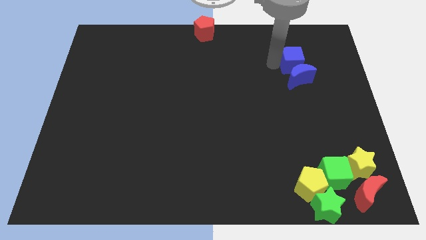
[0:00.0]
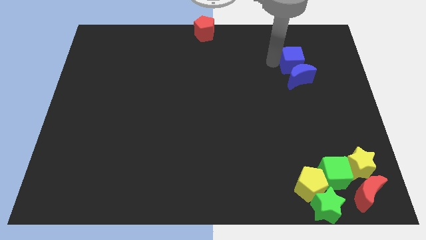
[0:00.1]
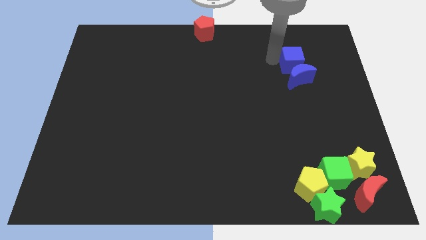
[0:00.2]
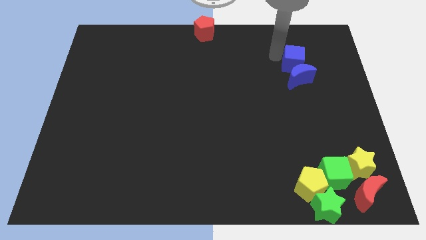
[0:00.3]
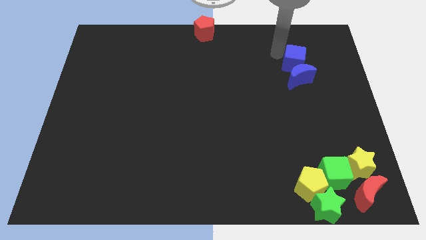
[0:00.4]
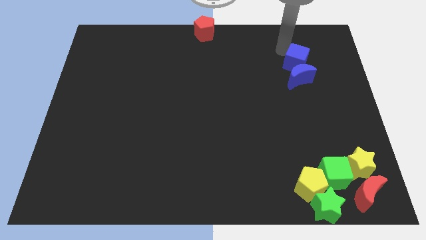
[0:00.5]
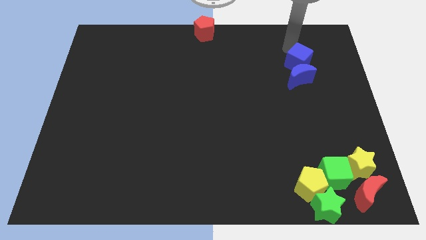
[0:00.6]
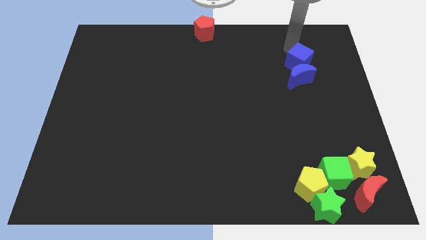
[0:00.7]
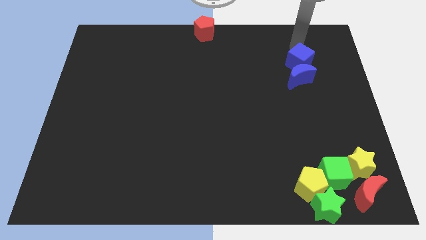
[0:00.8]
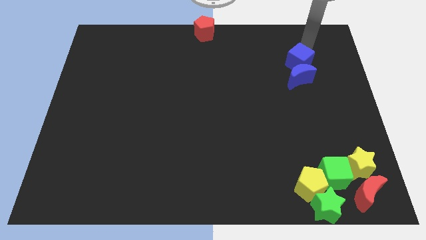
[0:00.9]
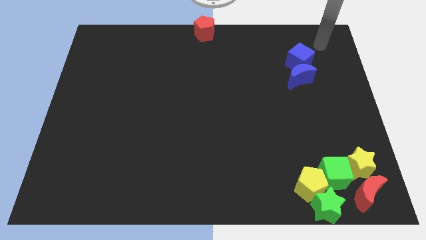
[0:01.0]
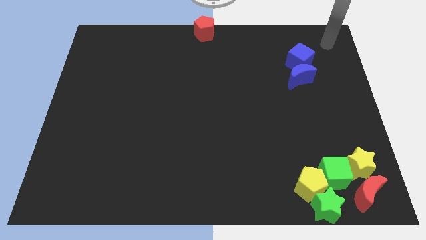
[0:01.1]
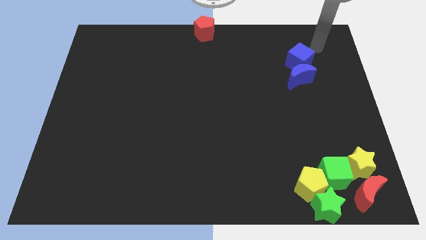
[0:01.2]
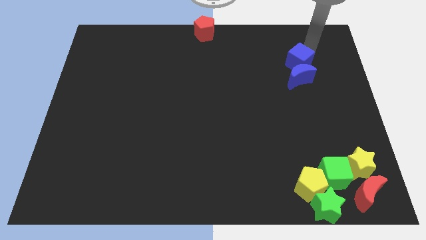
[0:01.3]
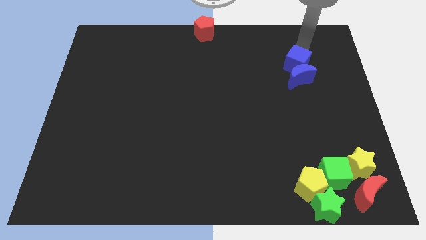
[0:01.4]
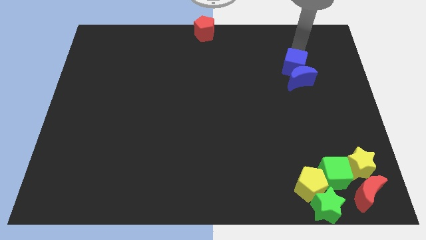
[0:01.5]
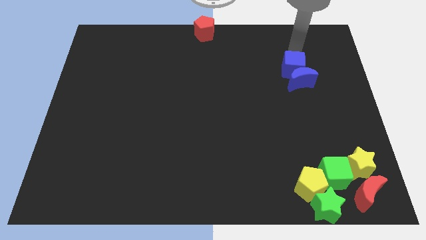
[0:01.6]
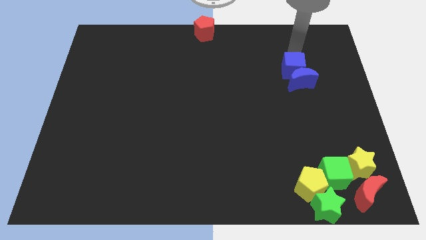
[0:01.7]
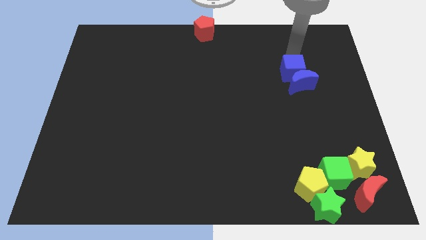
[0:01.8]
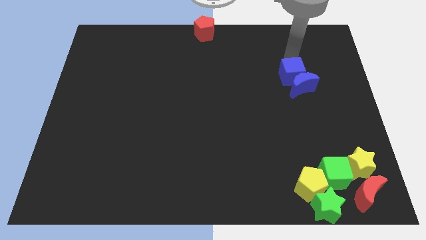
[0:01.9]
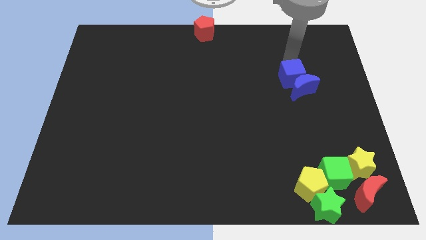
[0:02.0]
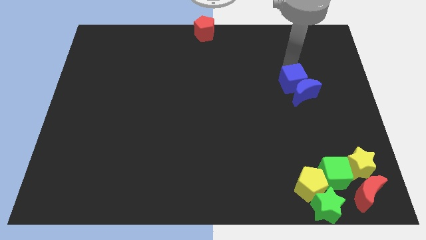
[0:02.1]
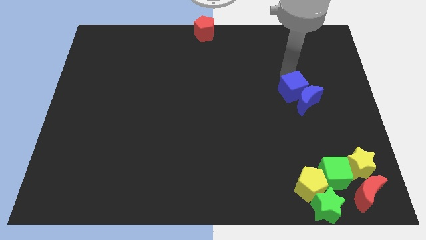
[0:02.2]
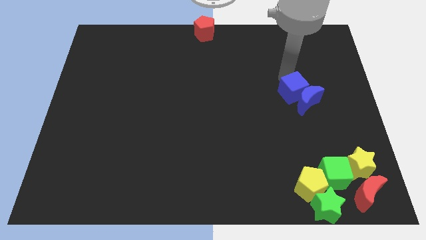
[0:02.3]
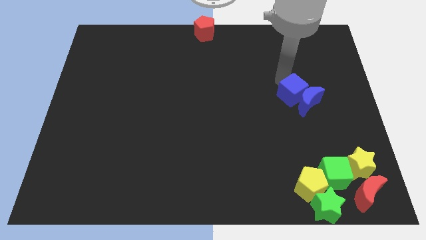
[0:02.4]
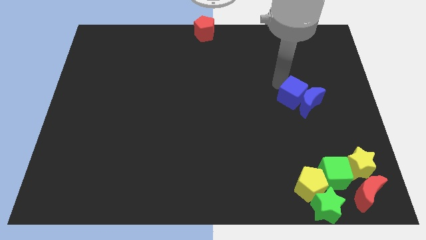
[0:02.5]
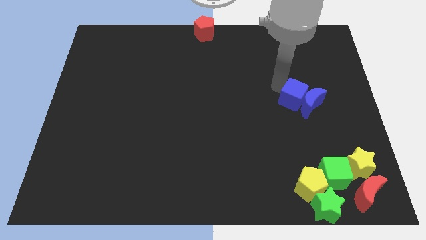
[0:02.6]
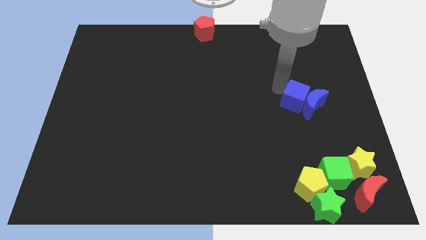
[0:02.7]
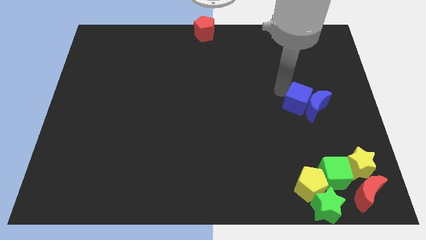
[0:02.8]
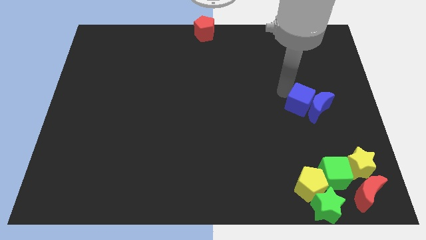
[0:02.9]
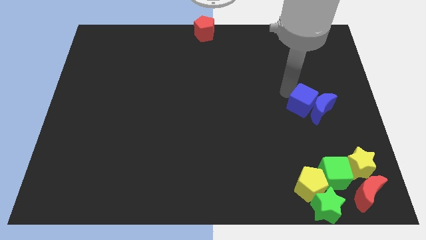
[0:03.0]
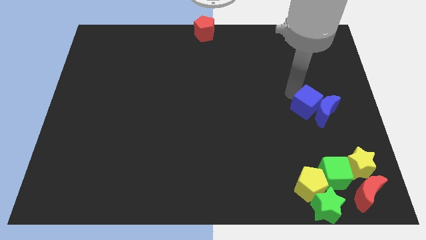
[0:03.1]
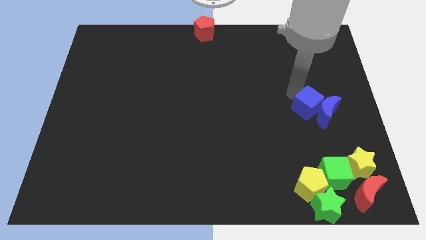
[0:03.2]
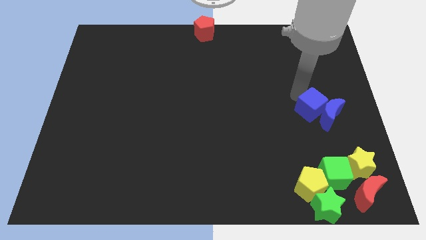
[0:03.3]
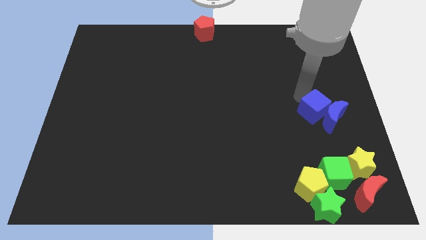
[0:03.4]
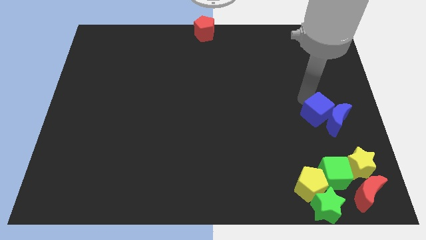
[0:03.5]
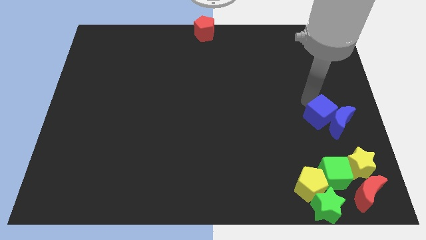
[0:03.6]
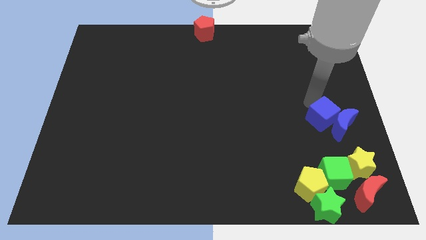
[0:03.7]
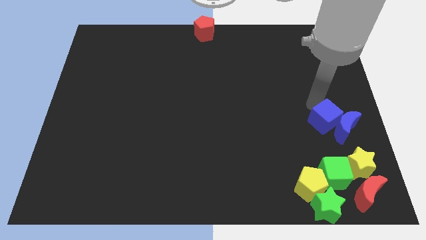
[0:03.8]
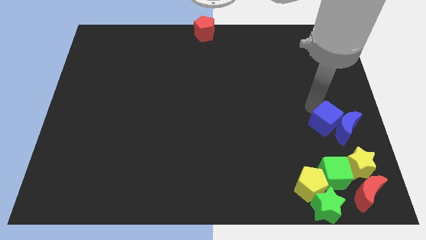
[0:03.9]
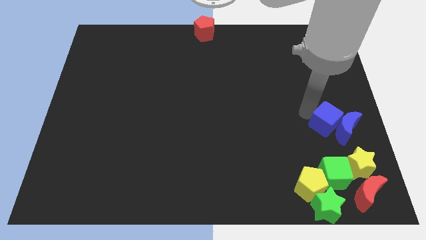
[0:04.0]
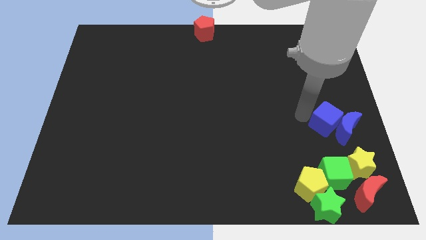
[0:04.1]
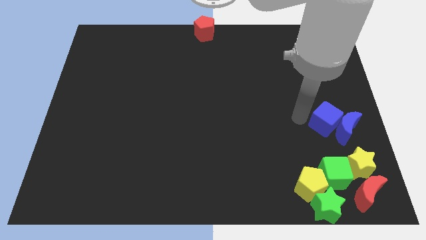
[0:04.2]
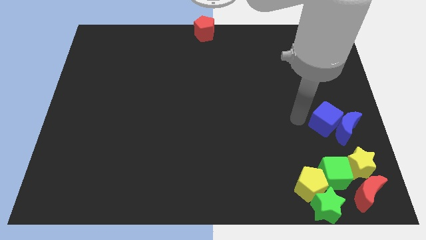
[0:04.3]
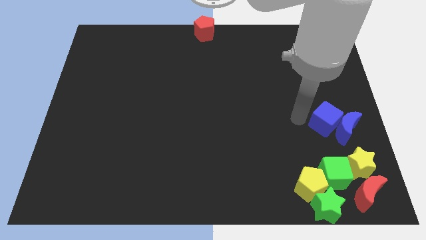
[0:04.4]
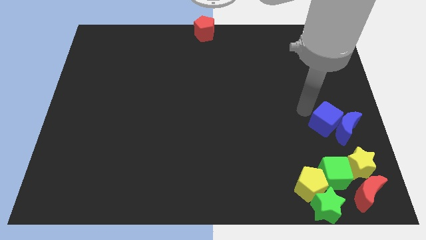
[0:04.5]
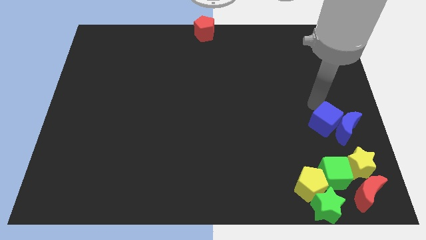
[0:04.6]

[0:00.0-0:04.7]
move the blue crescent towards a group of blocks at the bottom right corner of the board with the help of blue cube

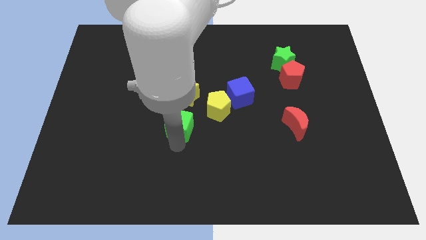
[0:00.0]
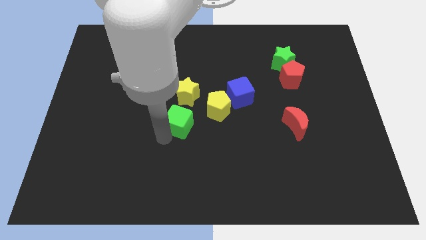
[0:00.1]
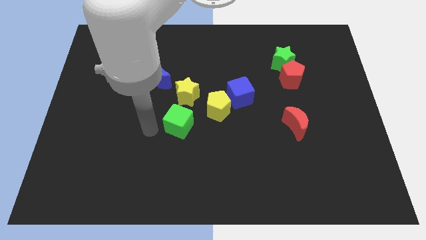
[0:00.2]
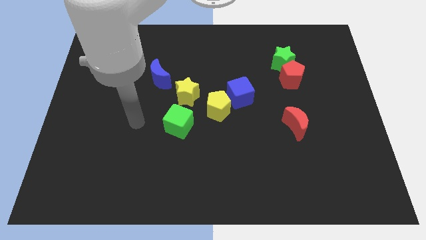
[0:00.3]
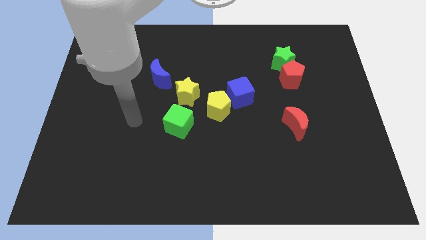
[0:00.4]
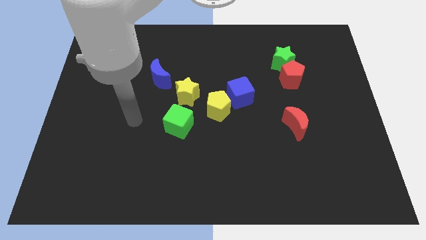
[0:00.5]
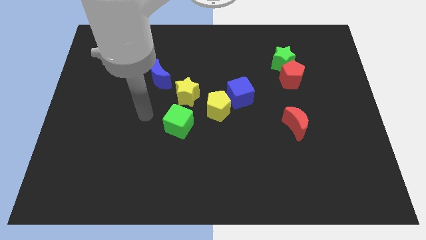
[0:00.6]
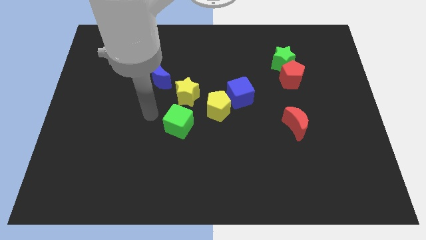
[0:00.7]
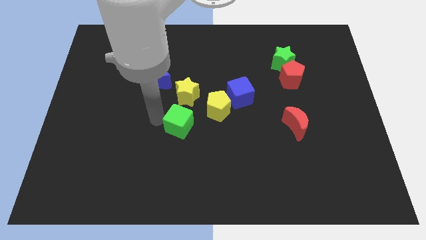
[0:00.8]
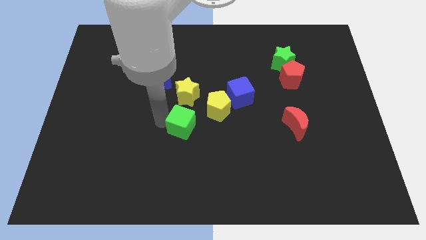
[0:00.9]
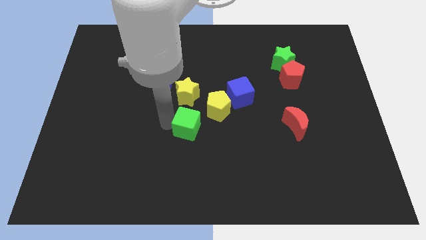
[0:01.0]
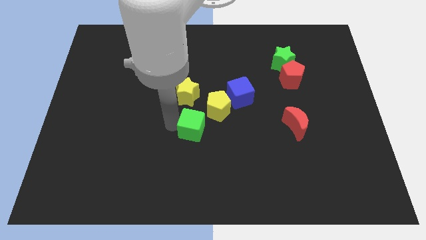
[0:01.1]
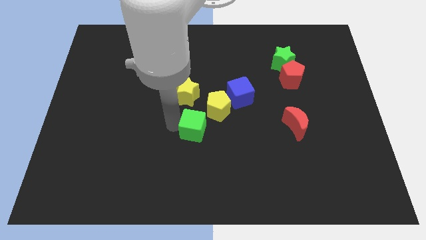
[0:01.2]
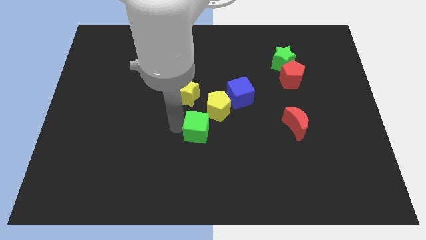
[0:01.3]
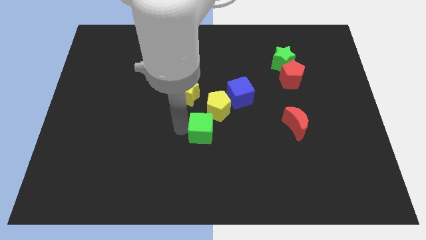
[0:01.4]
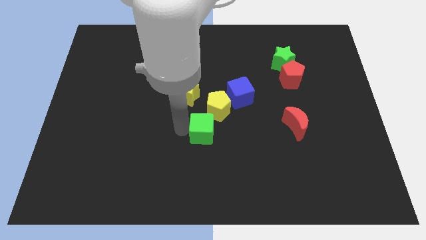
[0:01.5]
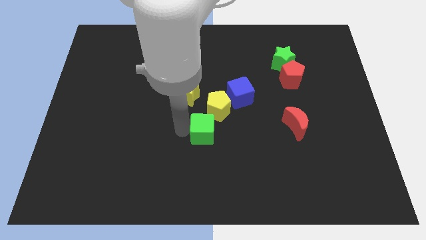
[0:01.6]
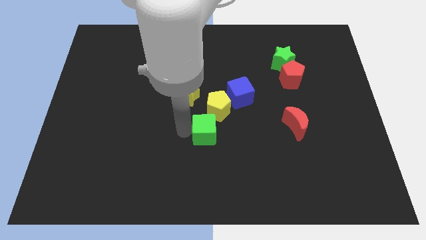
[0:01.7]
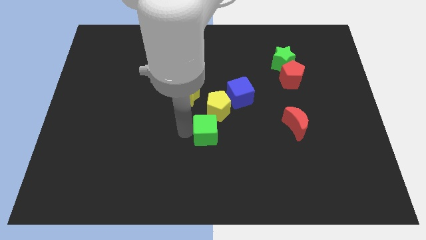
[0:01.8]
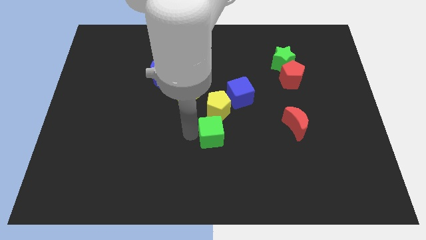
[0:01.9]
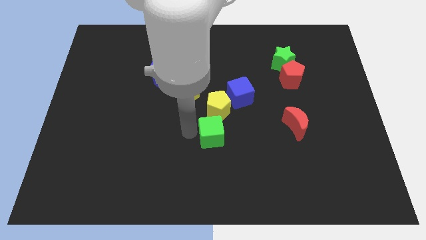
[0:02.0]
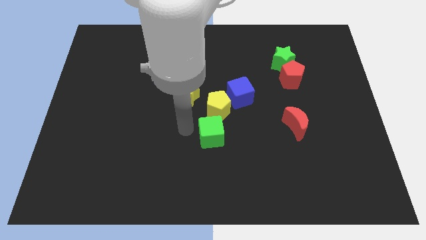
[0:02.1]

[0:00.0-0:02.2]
push the green cube below the yellow pentagon

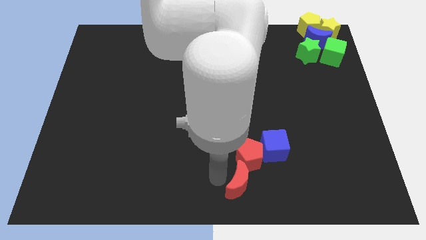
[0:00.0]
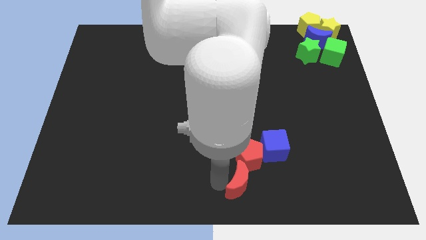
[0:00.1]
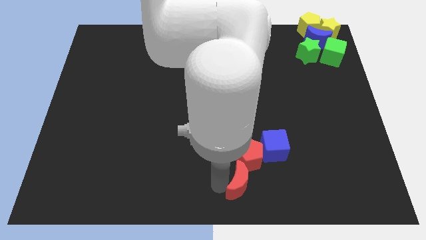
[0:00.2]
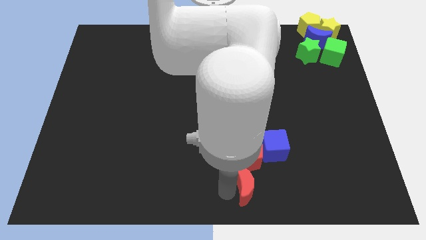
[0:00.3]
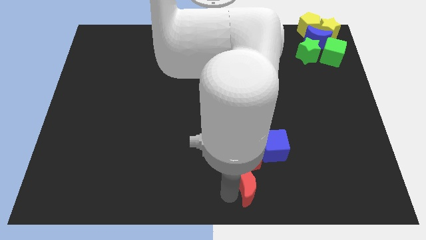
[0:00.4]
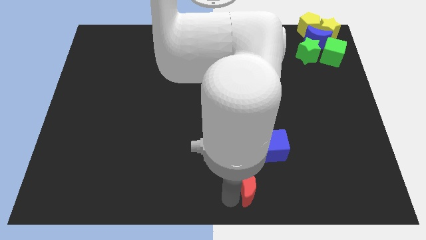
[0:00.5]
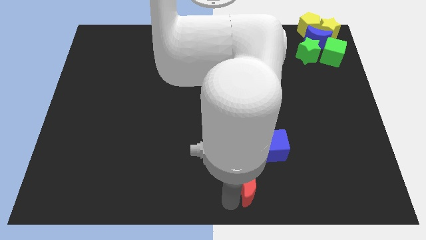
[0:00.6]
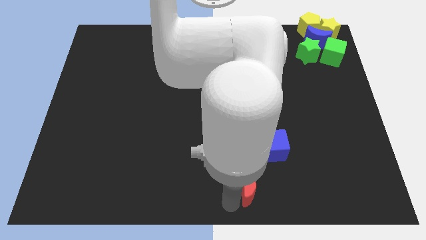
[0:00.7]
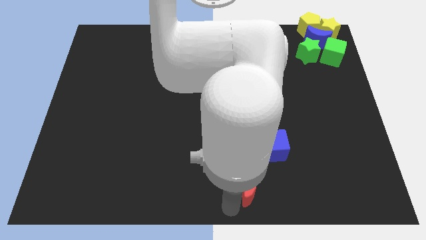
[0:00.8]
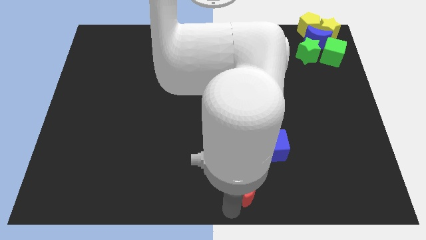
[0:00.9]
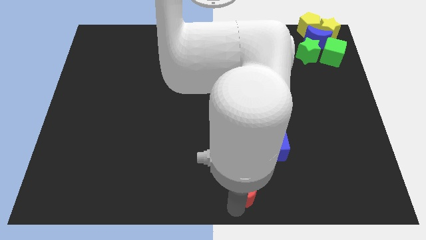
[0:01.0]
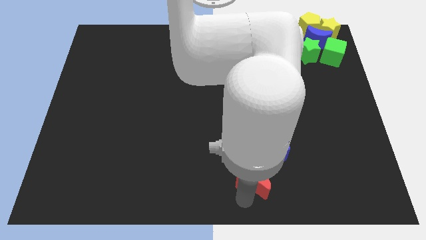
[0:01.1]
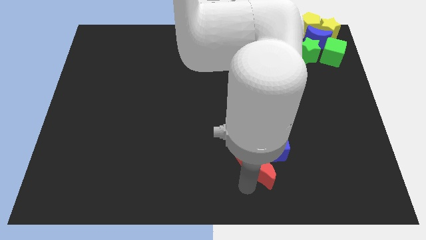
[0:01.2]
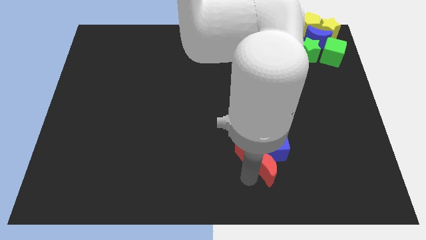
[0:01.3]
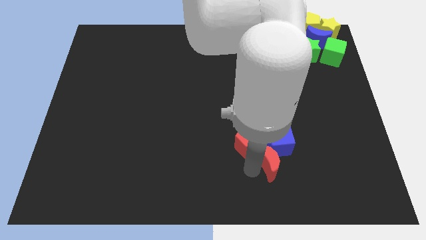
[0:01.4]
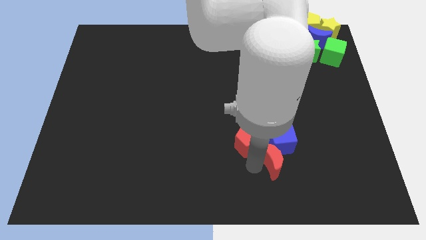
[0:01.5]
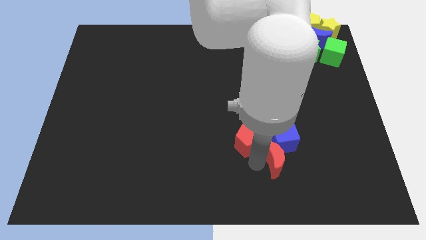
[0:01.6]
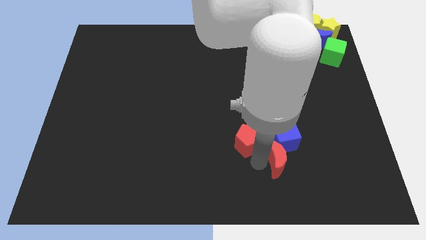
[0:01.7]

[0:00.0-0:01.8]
put the red moon at the bottom left of the blue cube

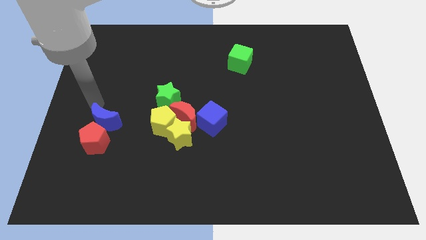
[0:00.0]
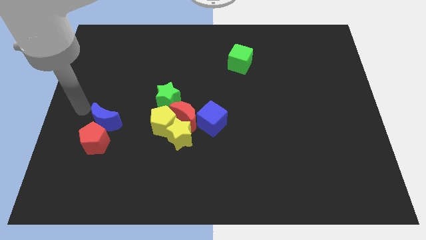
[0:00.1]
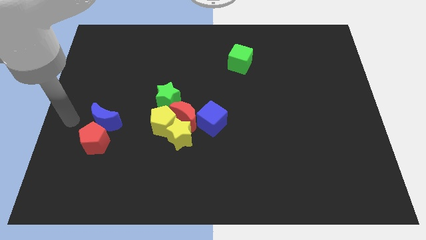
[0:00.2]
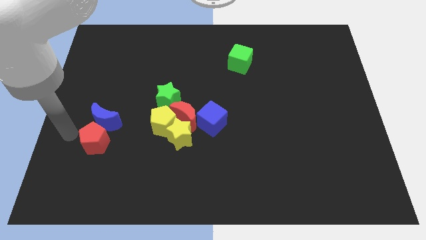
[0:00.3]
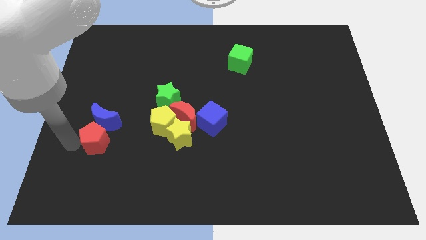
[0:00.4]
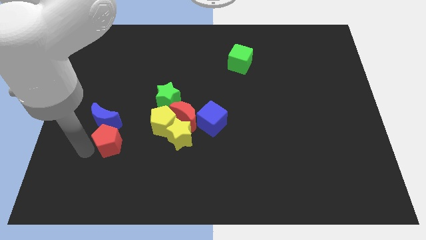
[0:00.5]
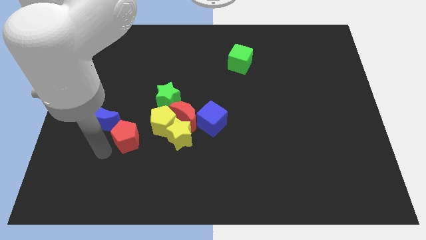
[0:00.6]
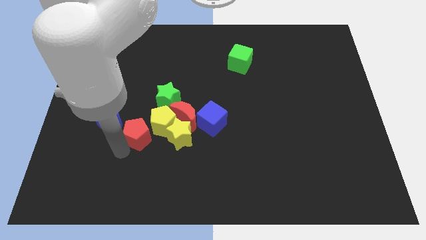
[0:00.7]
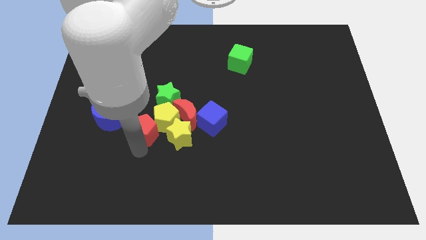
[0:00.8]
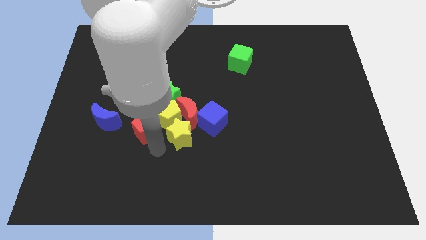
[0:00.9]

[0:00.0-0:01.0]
move the red pentagon into the yellow pentagon
